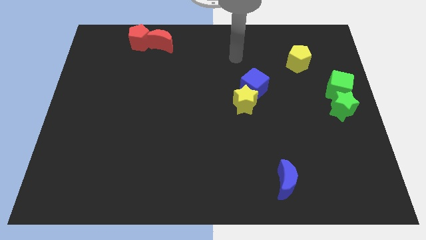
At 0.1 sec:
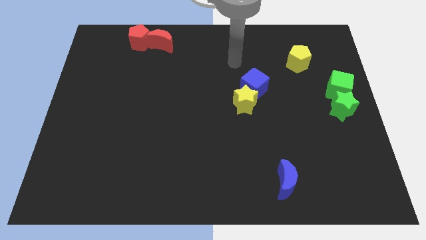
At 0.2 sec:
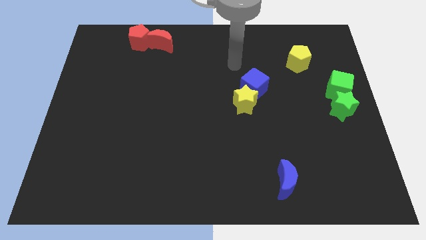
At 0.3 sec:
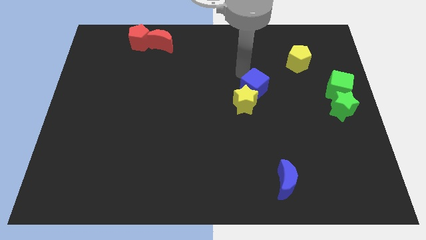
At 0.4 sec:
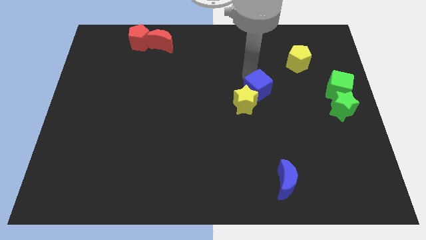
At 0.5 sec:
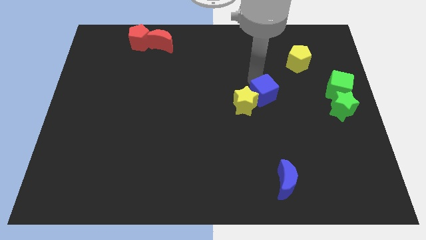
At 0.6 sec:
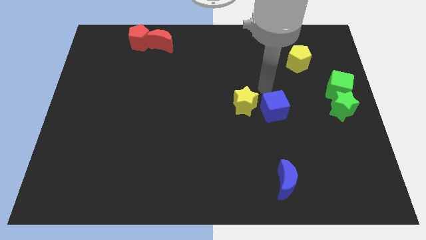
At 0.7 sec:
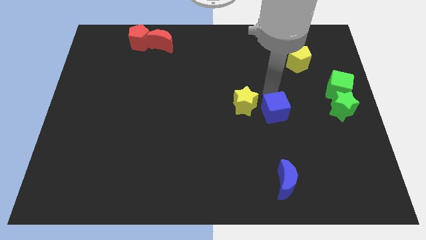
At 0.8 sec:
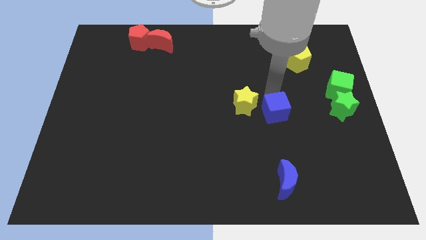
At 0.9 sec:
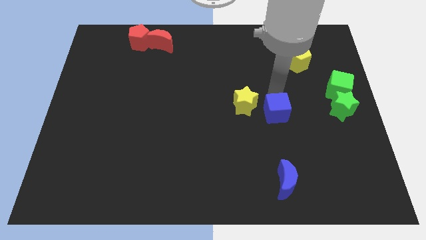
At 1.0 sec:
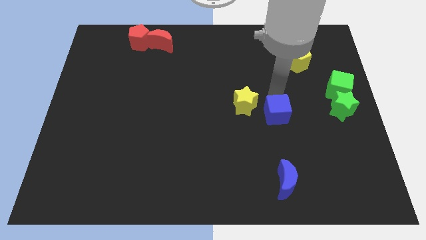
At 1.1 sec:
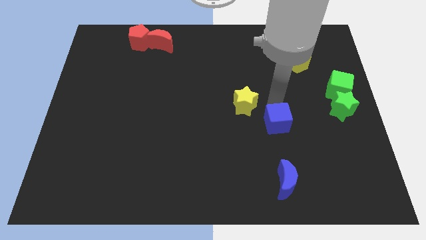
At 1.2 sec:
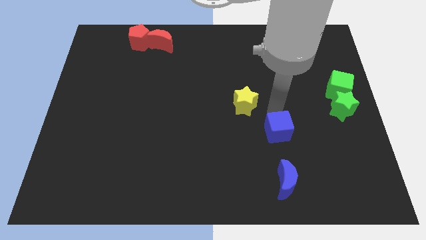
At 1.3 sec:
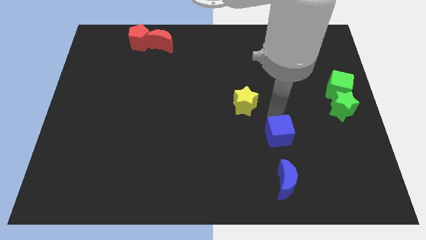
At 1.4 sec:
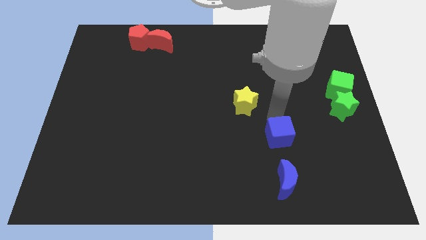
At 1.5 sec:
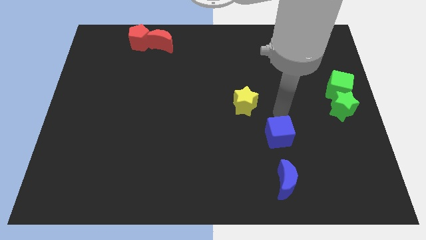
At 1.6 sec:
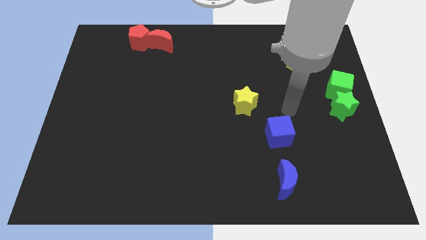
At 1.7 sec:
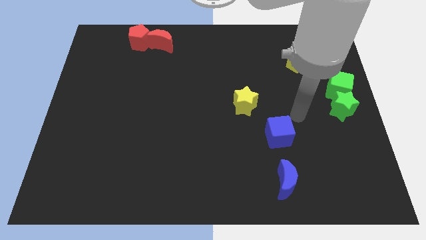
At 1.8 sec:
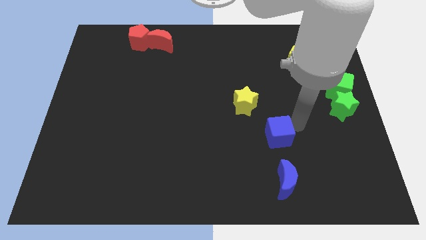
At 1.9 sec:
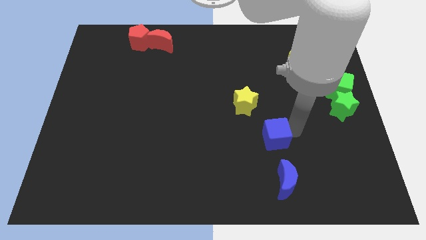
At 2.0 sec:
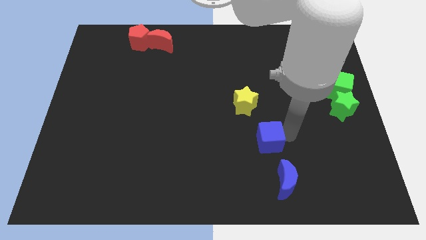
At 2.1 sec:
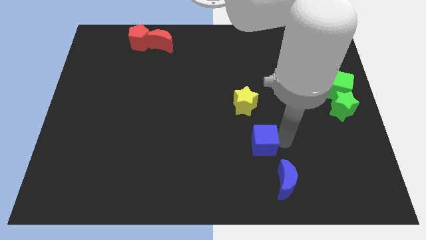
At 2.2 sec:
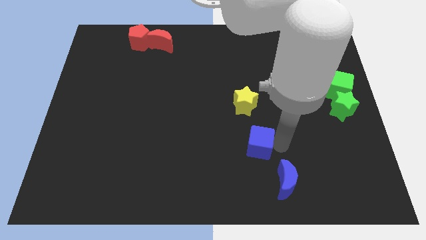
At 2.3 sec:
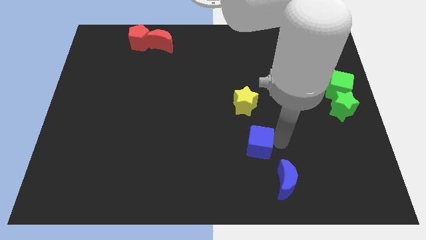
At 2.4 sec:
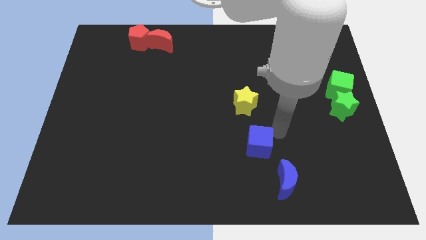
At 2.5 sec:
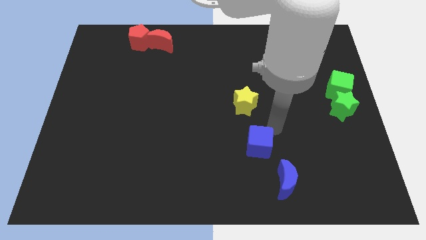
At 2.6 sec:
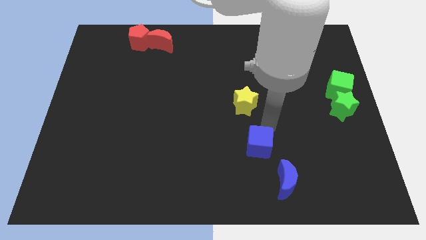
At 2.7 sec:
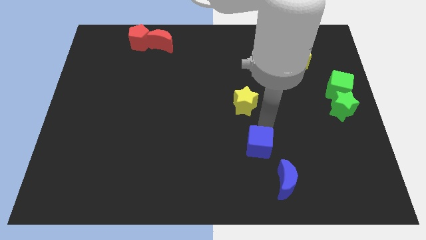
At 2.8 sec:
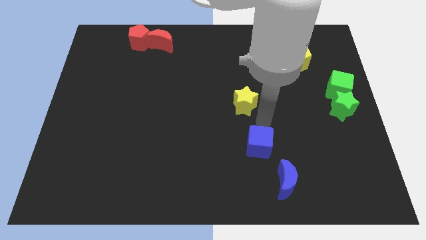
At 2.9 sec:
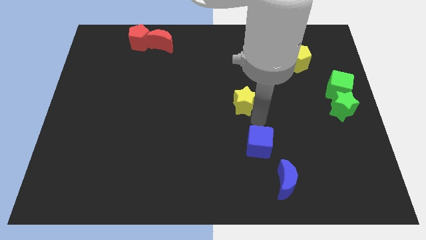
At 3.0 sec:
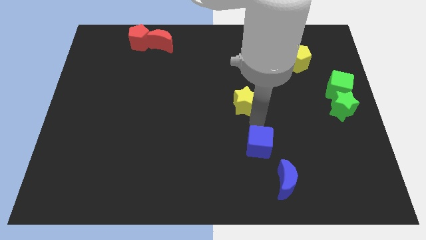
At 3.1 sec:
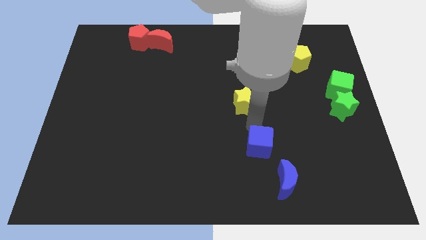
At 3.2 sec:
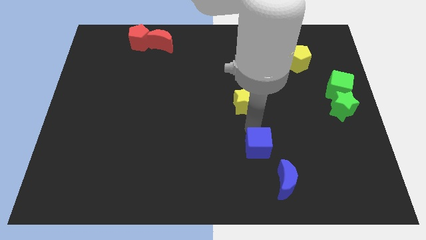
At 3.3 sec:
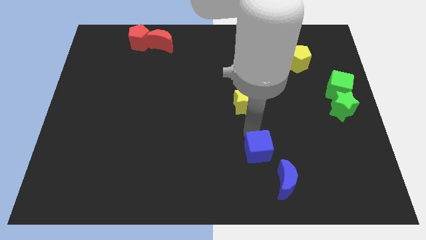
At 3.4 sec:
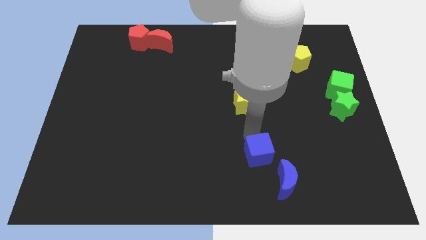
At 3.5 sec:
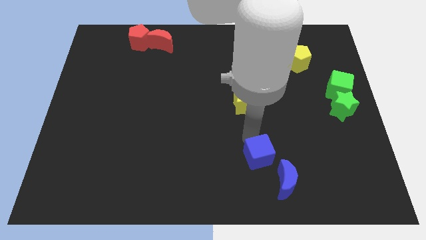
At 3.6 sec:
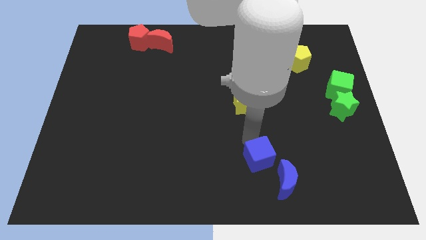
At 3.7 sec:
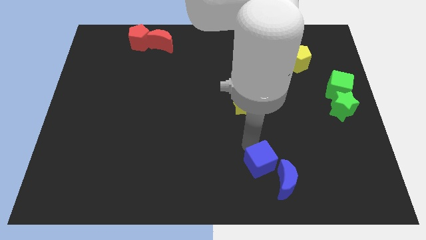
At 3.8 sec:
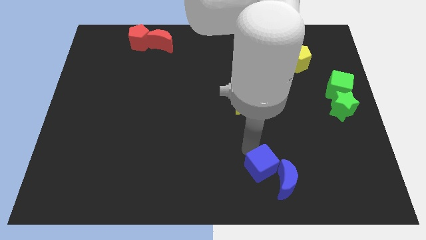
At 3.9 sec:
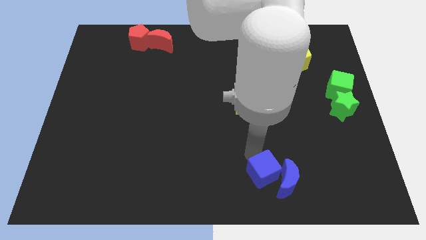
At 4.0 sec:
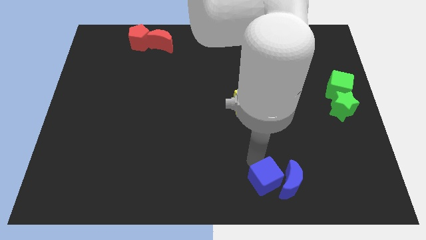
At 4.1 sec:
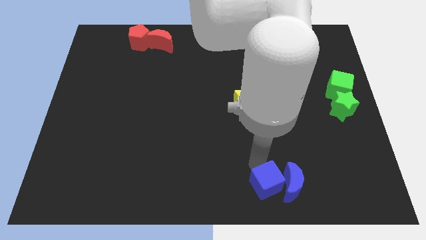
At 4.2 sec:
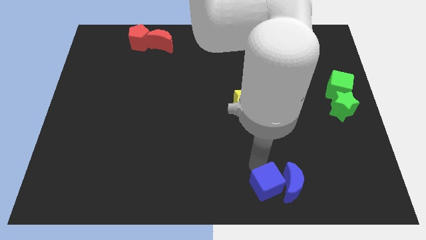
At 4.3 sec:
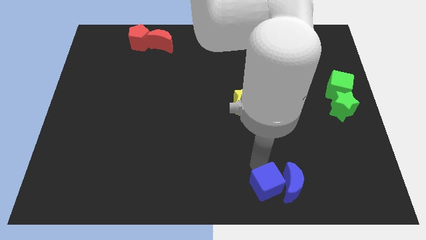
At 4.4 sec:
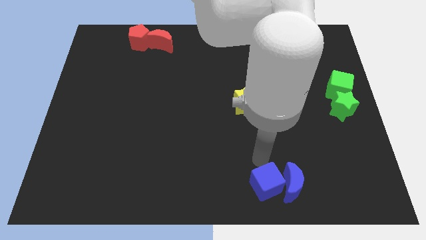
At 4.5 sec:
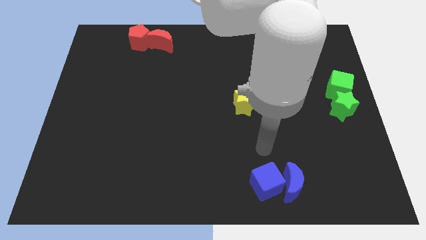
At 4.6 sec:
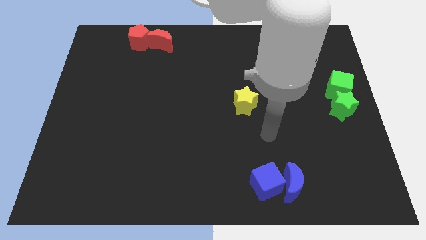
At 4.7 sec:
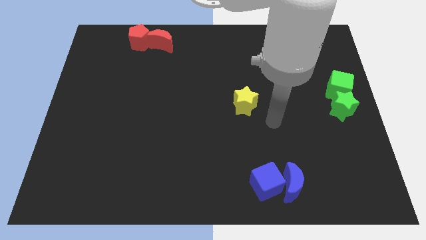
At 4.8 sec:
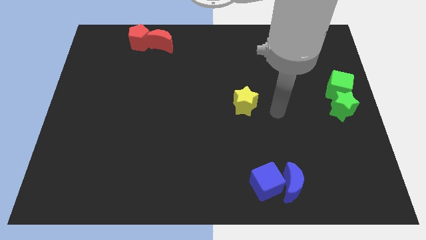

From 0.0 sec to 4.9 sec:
place the blue cube left to the blue moon

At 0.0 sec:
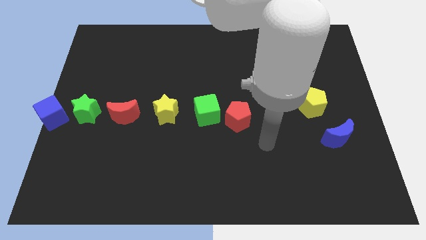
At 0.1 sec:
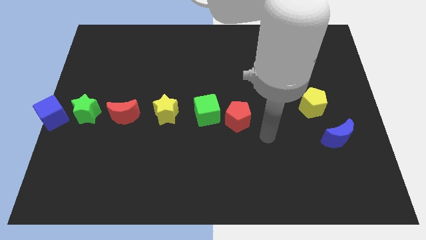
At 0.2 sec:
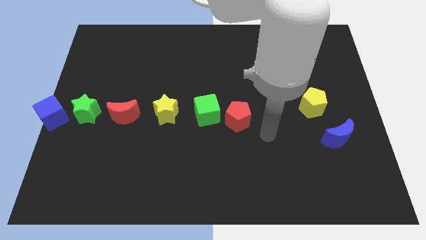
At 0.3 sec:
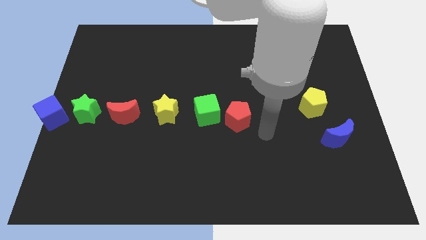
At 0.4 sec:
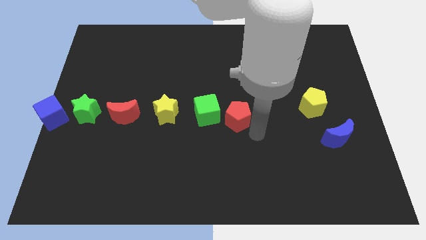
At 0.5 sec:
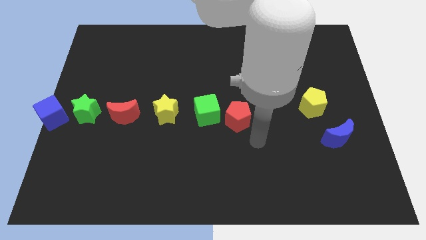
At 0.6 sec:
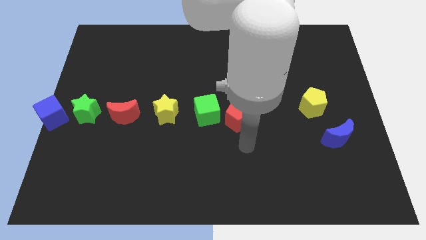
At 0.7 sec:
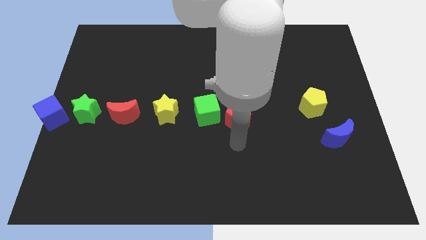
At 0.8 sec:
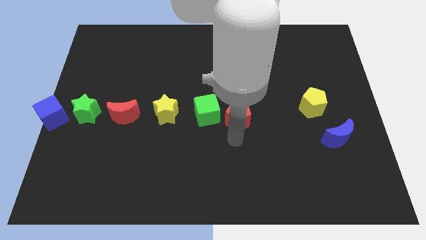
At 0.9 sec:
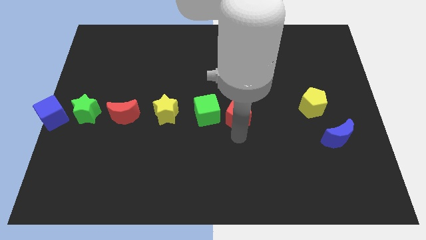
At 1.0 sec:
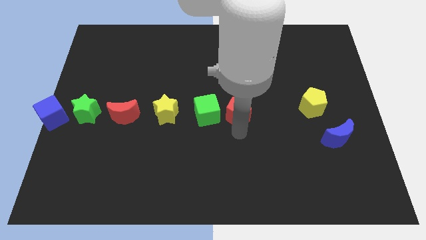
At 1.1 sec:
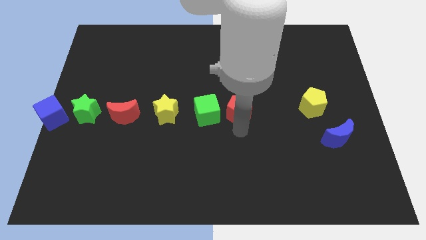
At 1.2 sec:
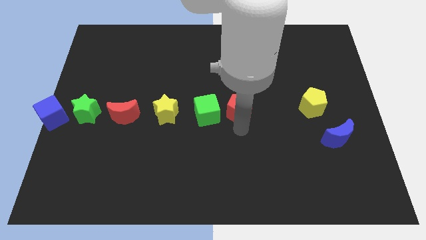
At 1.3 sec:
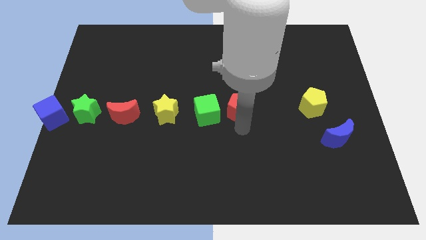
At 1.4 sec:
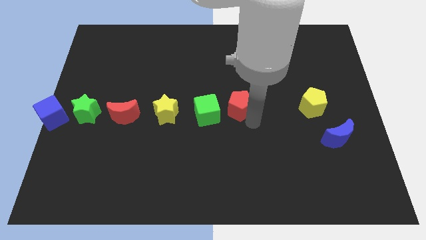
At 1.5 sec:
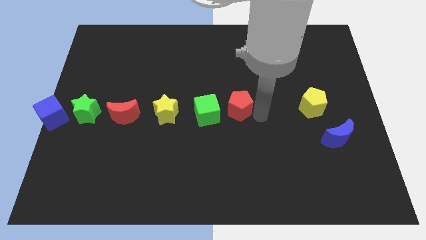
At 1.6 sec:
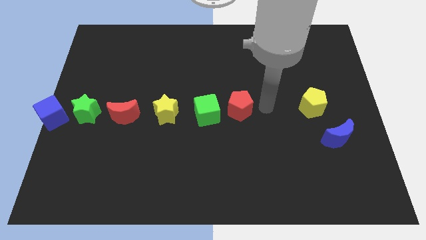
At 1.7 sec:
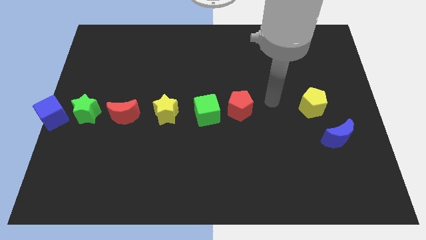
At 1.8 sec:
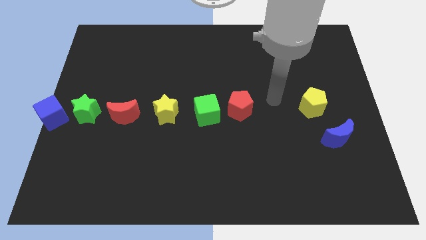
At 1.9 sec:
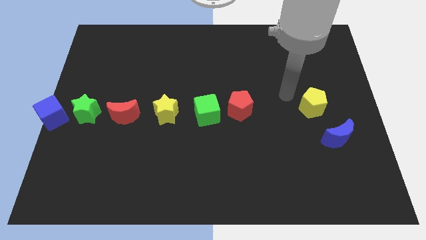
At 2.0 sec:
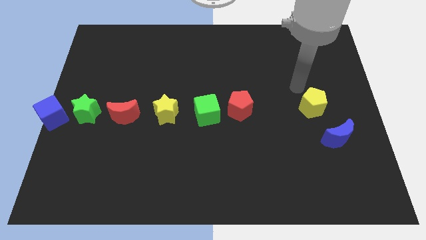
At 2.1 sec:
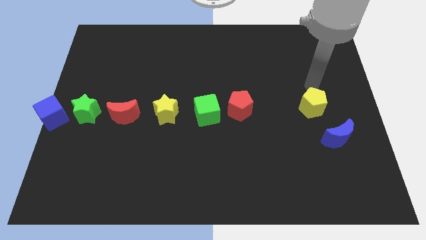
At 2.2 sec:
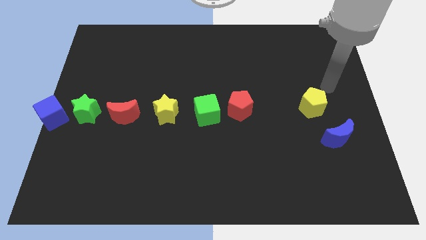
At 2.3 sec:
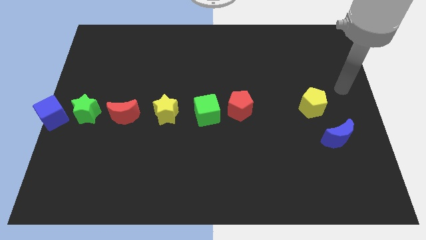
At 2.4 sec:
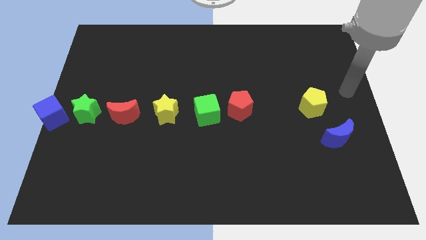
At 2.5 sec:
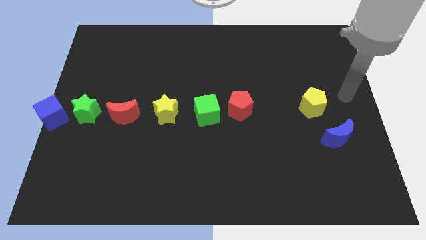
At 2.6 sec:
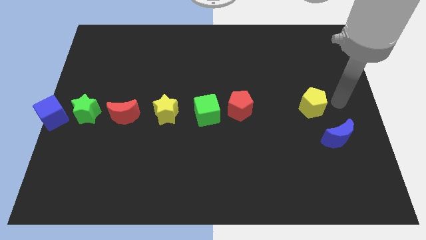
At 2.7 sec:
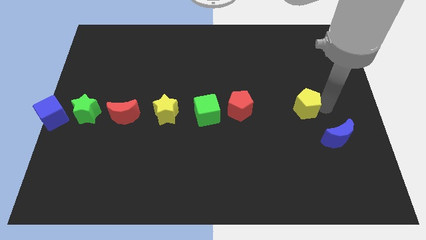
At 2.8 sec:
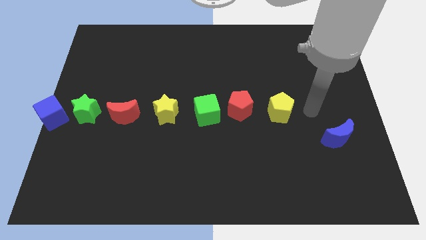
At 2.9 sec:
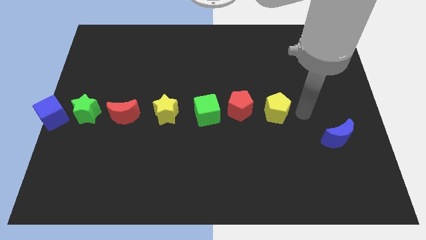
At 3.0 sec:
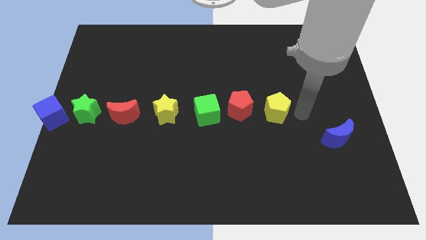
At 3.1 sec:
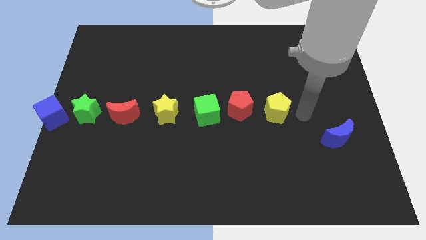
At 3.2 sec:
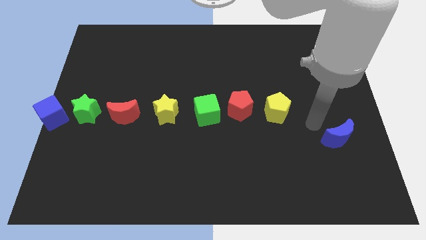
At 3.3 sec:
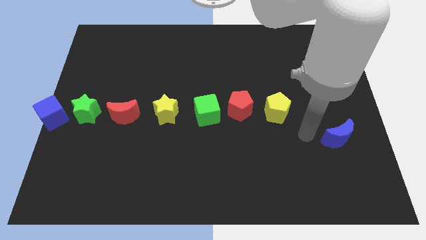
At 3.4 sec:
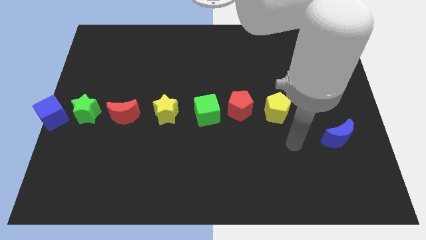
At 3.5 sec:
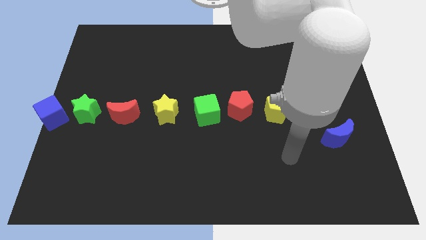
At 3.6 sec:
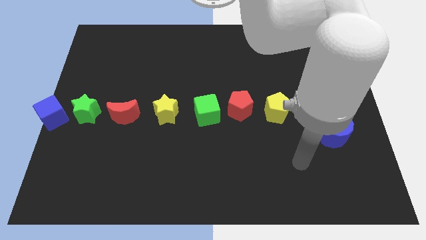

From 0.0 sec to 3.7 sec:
push yellow pentagon beside red pentagon to form a horizontal line

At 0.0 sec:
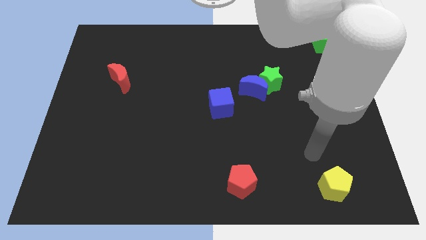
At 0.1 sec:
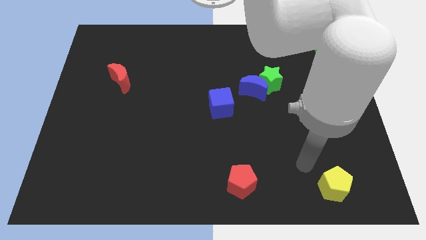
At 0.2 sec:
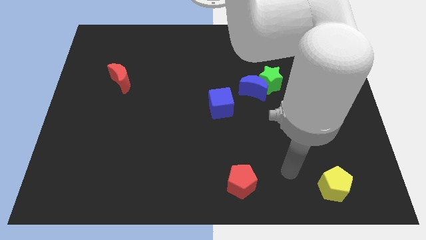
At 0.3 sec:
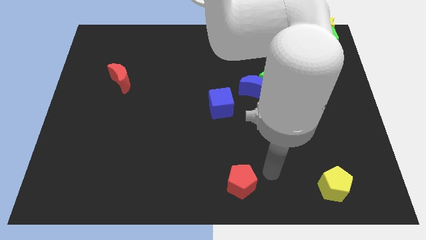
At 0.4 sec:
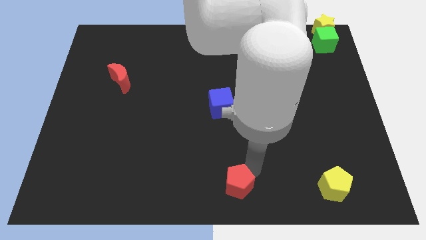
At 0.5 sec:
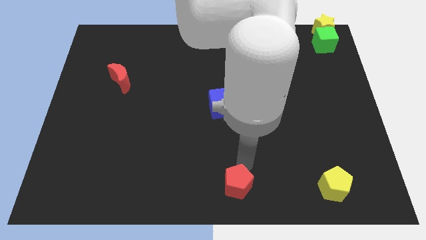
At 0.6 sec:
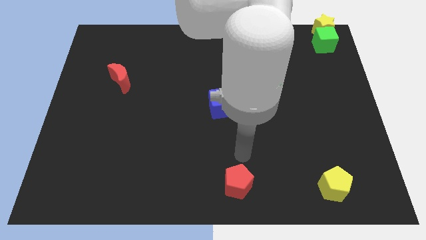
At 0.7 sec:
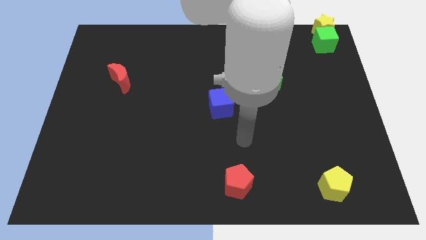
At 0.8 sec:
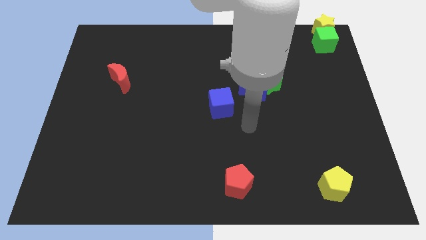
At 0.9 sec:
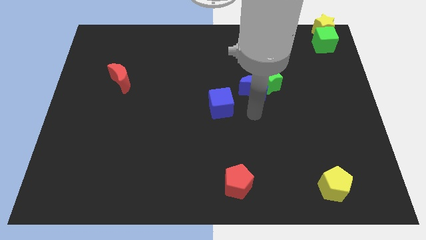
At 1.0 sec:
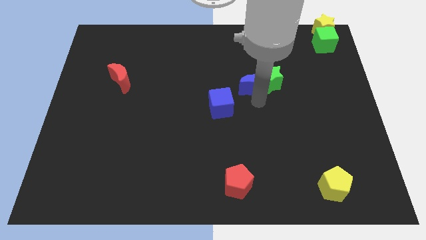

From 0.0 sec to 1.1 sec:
place your arm to the bottom of blue moon
